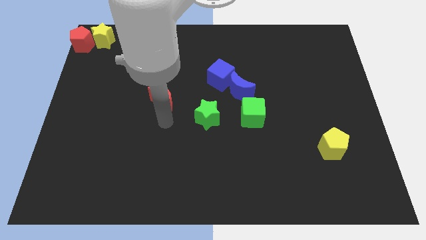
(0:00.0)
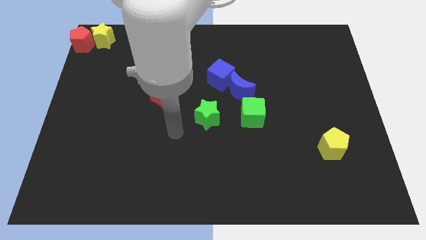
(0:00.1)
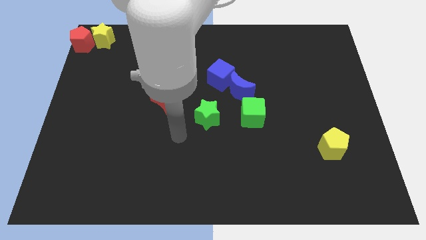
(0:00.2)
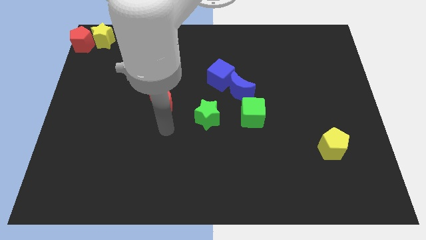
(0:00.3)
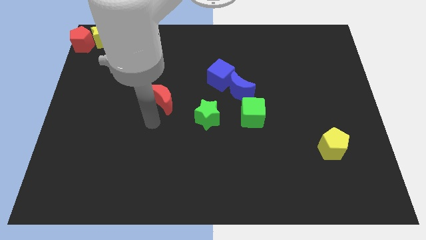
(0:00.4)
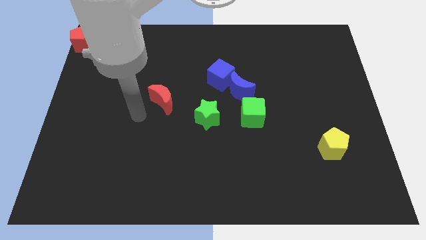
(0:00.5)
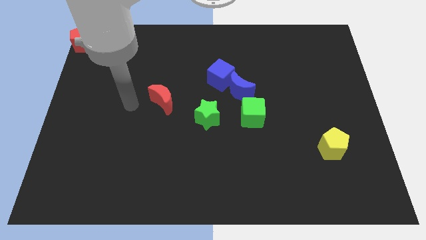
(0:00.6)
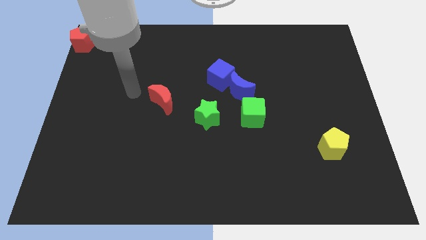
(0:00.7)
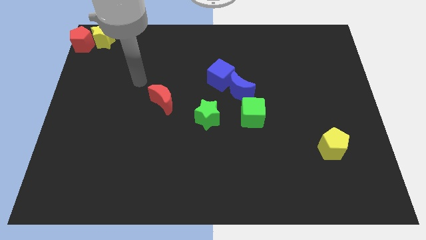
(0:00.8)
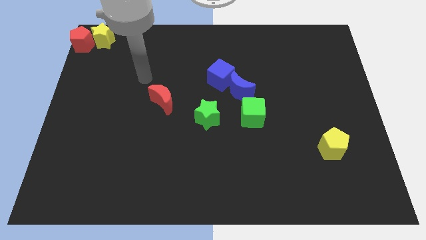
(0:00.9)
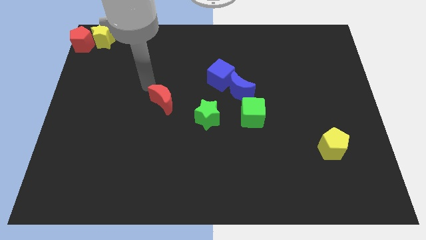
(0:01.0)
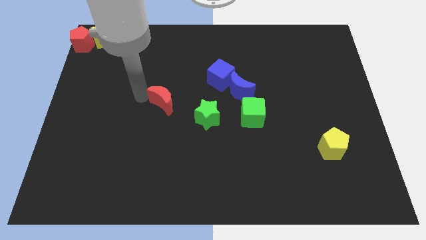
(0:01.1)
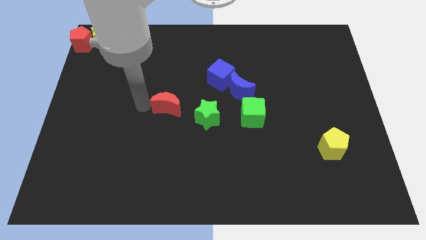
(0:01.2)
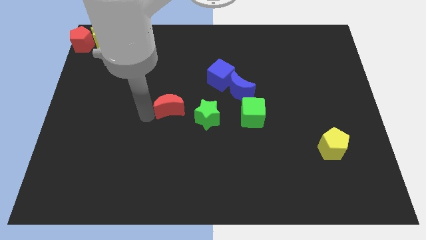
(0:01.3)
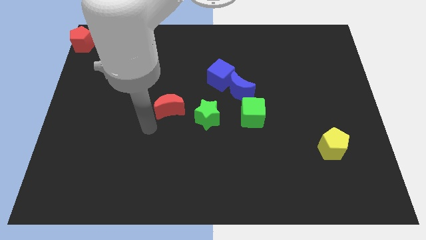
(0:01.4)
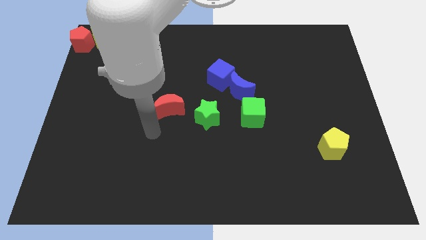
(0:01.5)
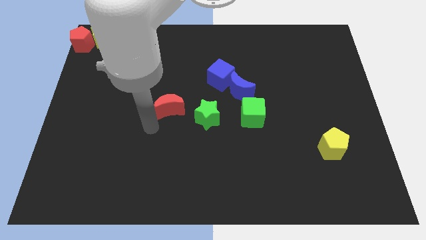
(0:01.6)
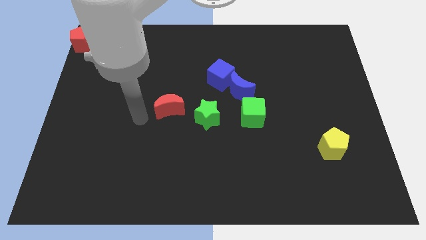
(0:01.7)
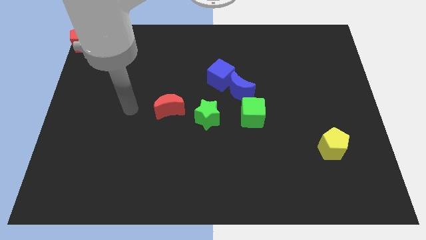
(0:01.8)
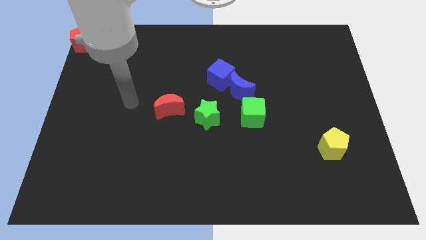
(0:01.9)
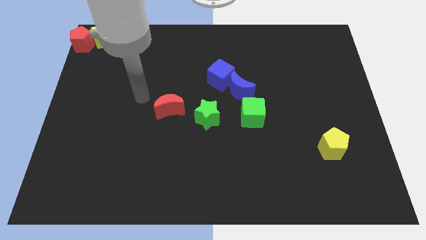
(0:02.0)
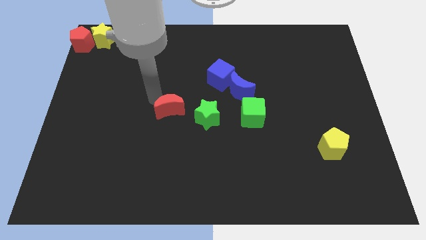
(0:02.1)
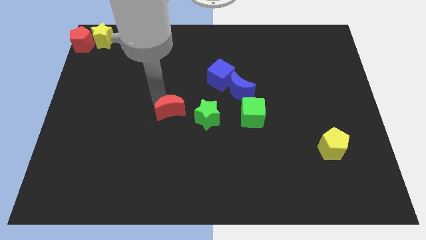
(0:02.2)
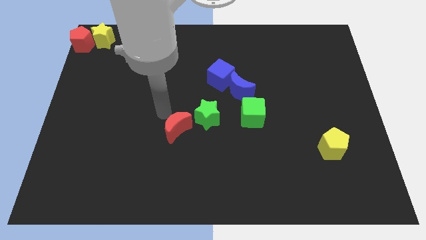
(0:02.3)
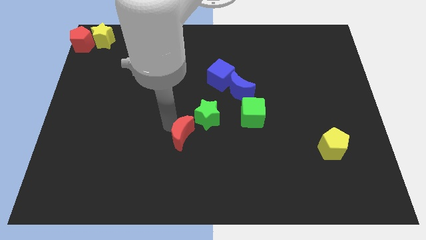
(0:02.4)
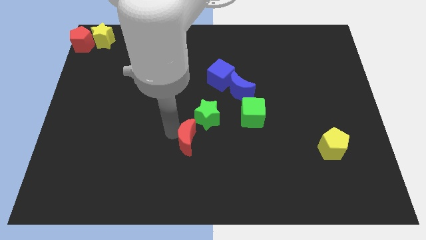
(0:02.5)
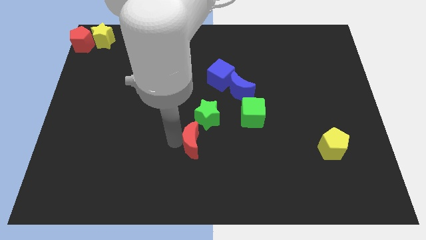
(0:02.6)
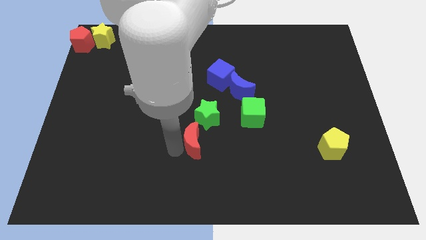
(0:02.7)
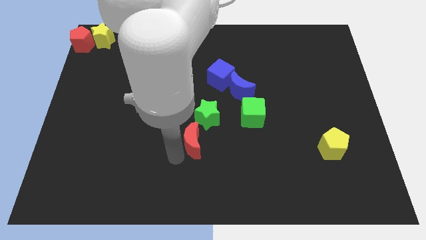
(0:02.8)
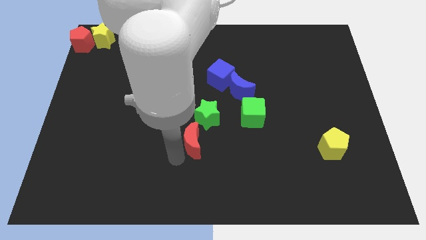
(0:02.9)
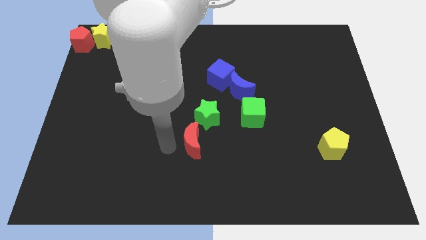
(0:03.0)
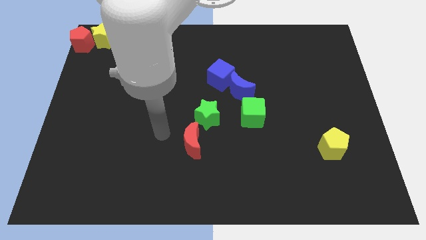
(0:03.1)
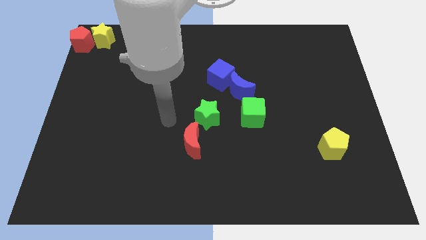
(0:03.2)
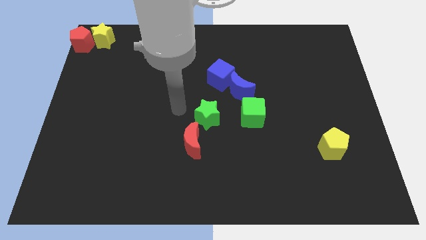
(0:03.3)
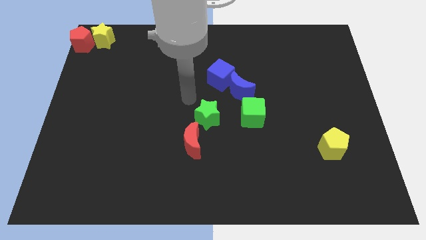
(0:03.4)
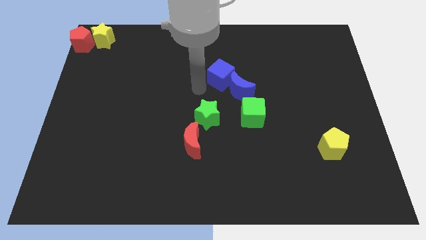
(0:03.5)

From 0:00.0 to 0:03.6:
move the red moon towards the bottom side of the green star

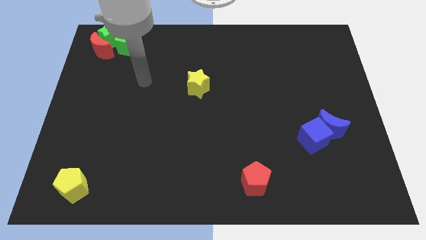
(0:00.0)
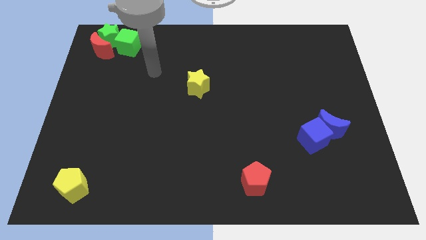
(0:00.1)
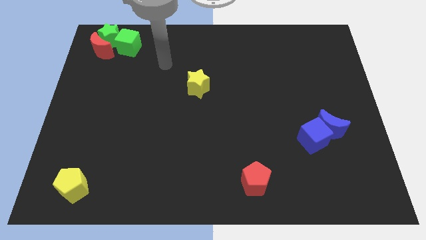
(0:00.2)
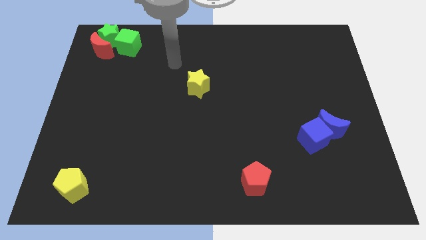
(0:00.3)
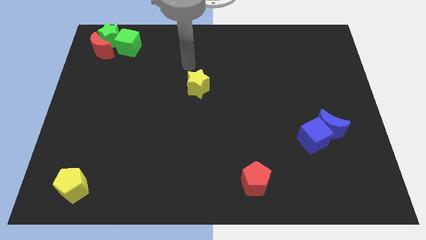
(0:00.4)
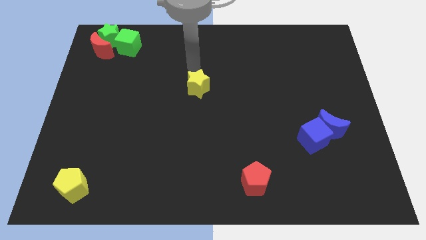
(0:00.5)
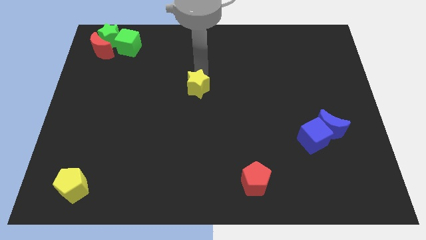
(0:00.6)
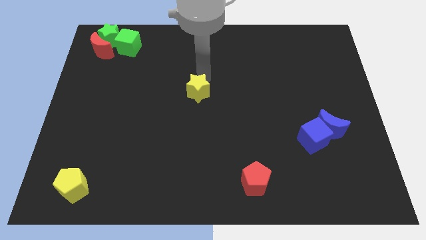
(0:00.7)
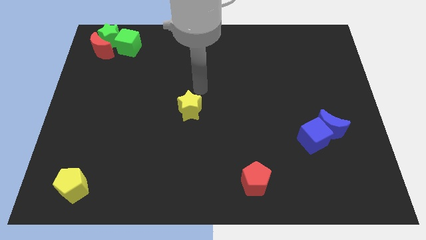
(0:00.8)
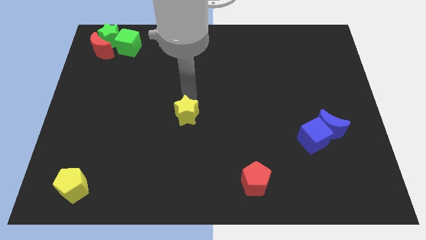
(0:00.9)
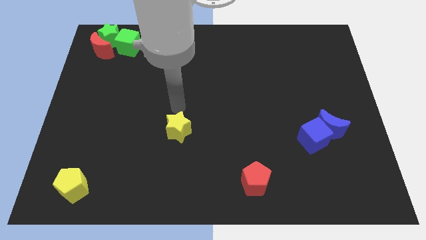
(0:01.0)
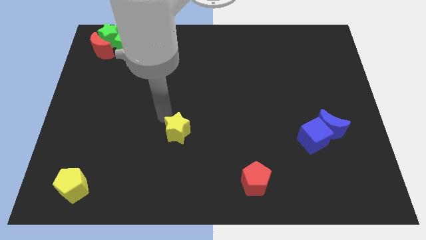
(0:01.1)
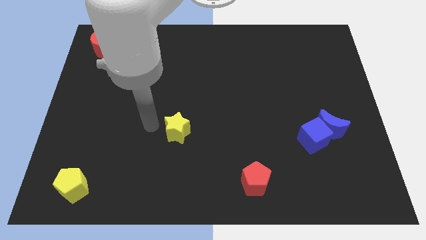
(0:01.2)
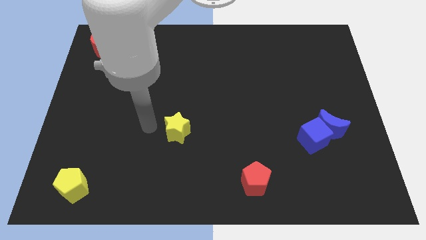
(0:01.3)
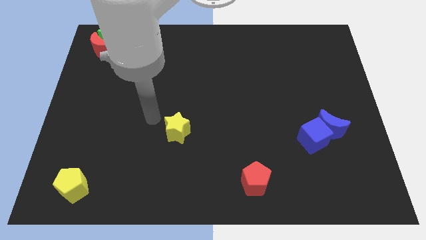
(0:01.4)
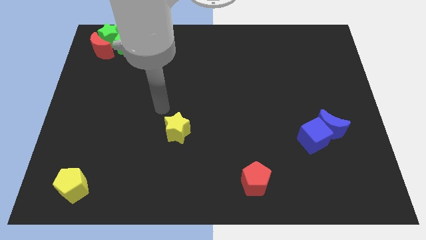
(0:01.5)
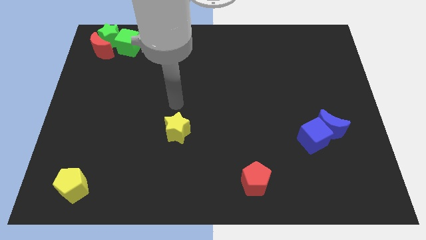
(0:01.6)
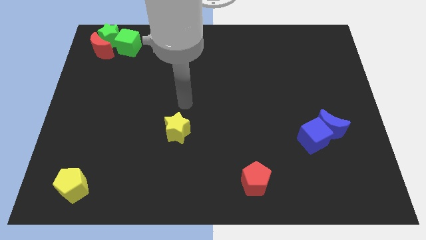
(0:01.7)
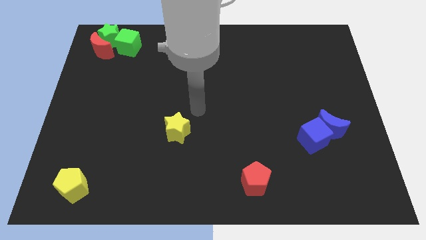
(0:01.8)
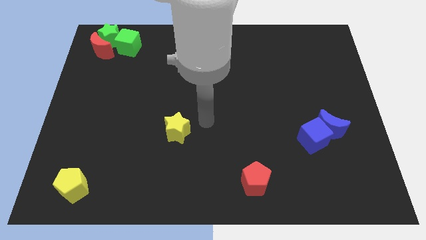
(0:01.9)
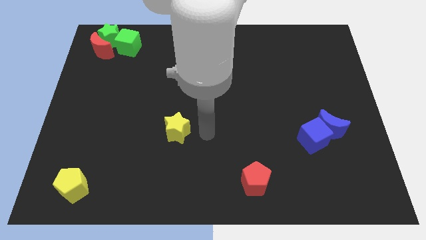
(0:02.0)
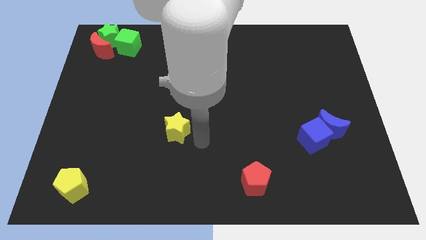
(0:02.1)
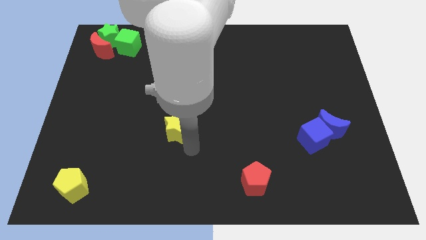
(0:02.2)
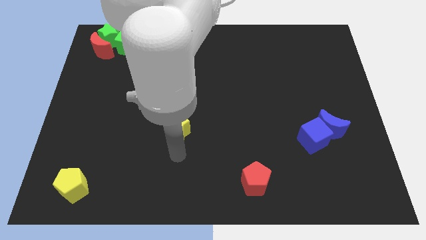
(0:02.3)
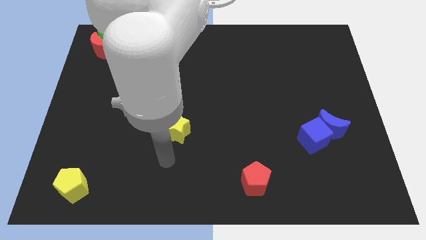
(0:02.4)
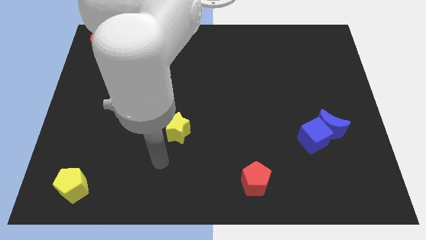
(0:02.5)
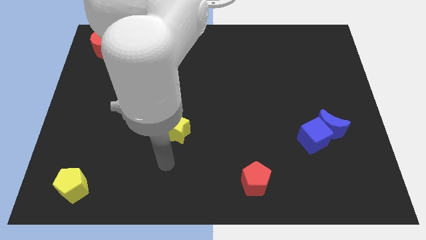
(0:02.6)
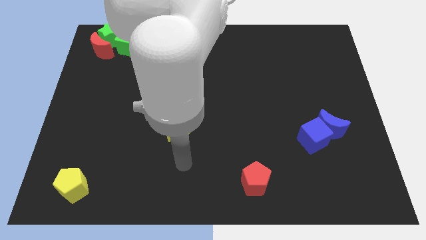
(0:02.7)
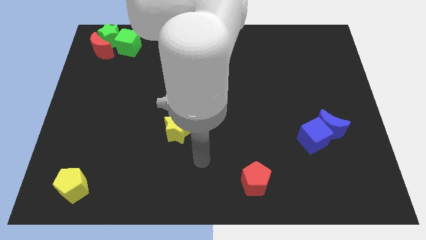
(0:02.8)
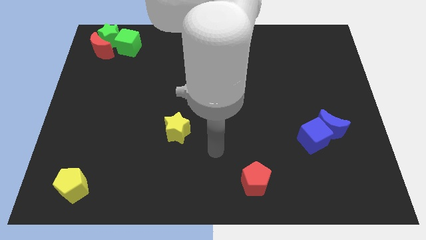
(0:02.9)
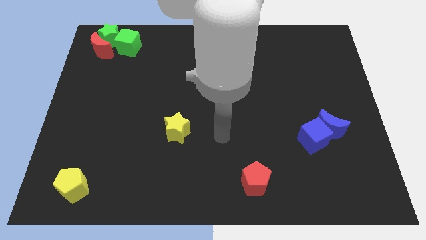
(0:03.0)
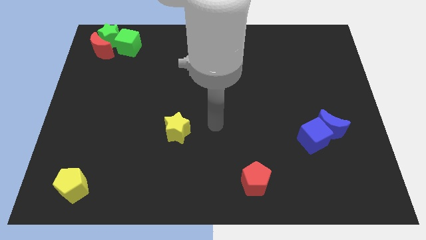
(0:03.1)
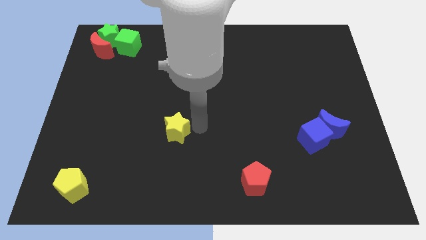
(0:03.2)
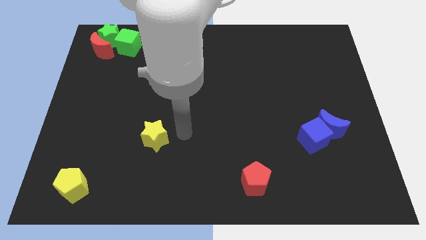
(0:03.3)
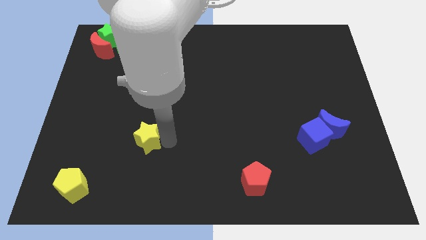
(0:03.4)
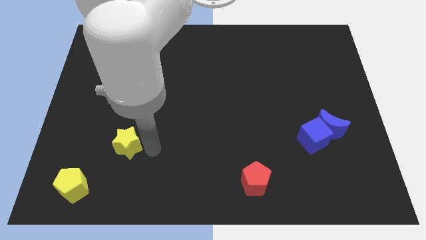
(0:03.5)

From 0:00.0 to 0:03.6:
move the yellow star diagonally towards the yellow pentagon

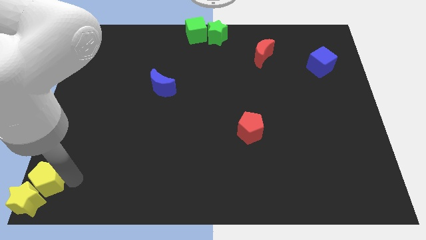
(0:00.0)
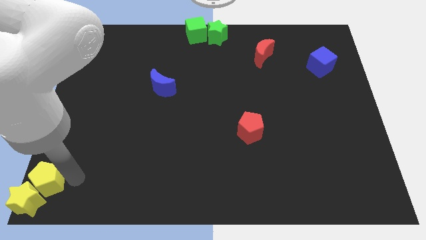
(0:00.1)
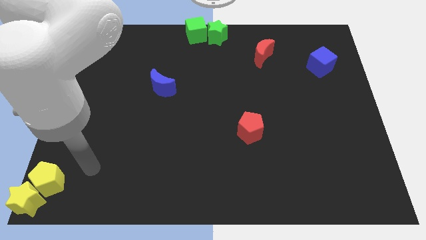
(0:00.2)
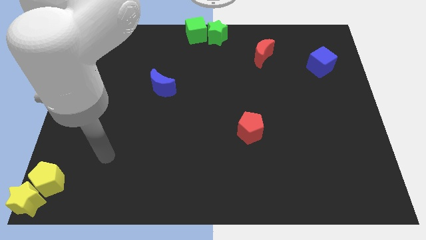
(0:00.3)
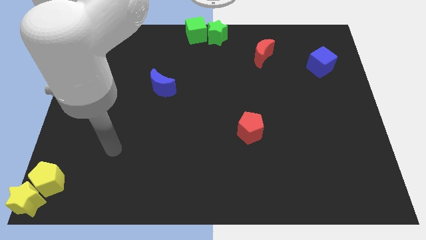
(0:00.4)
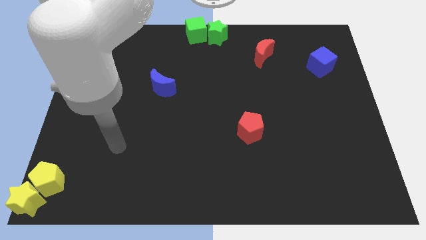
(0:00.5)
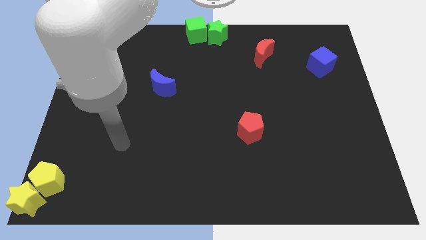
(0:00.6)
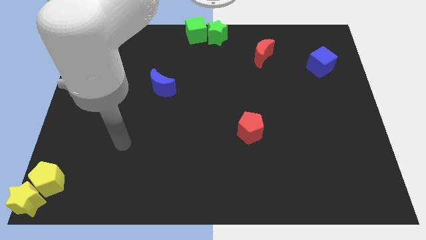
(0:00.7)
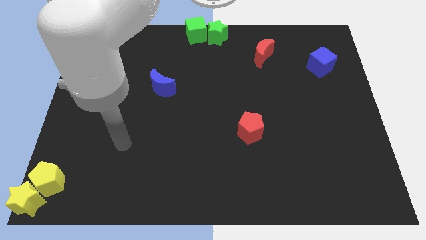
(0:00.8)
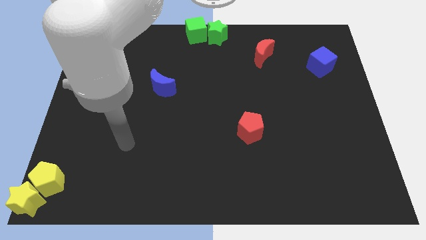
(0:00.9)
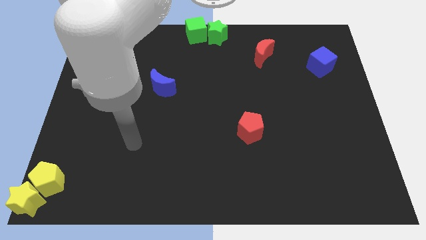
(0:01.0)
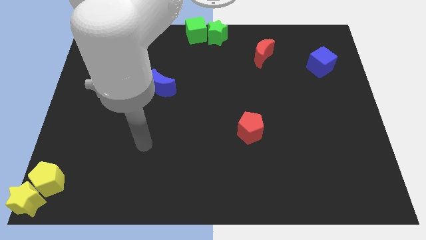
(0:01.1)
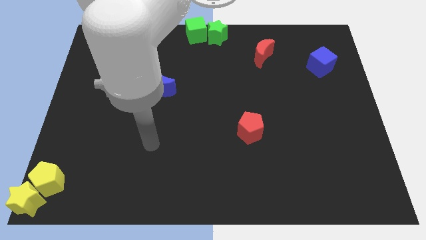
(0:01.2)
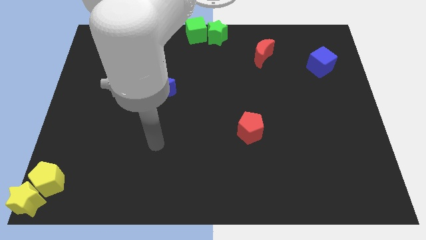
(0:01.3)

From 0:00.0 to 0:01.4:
move your arm away from the yellow pentagon
